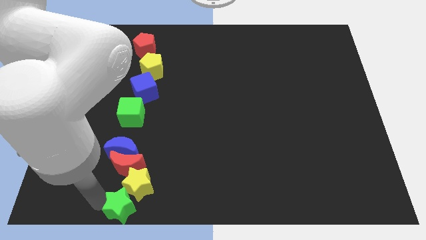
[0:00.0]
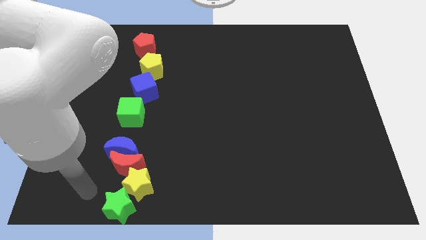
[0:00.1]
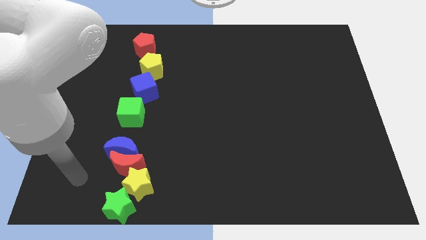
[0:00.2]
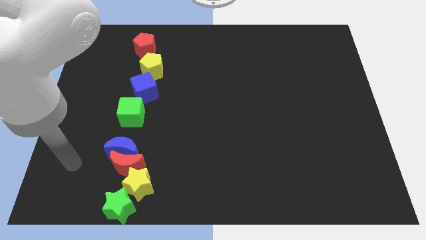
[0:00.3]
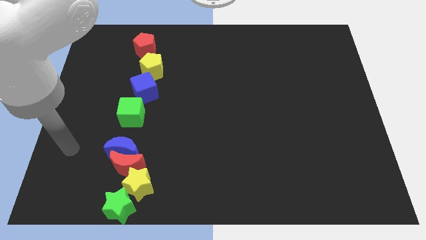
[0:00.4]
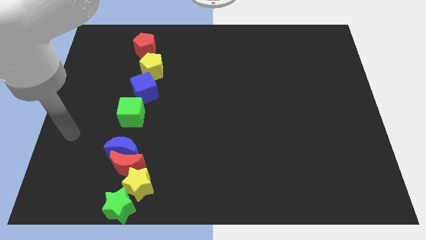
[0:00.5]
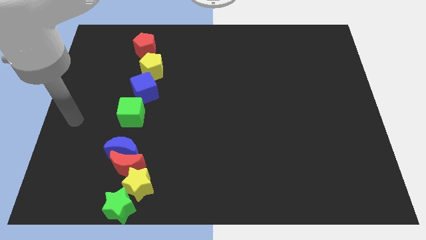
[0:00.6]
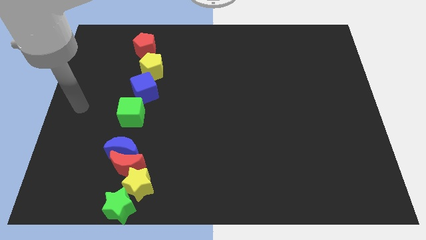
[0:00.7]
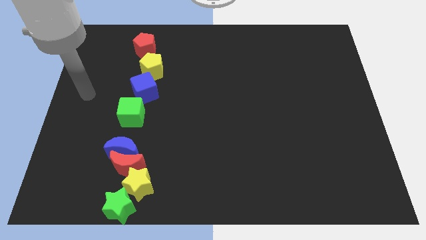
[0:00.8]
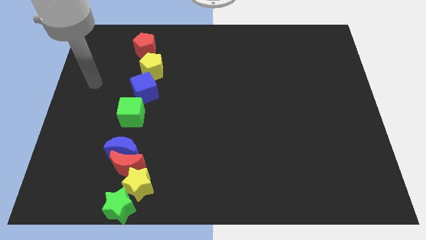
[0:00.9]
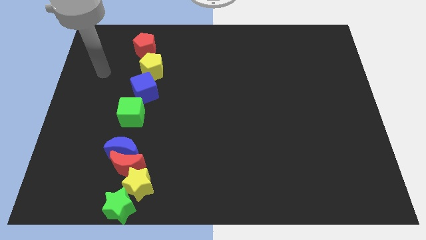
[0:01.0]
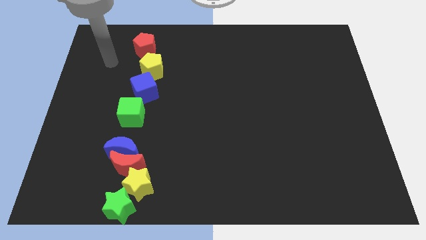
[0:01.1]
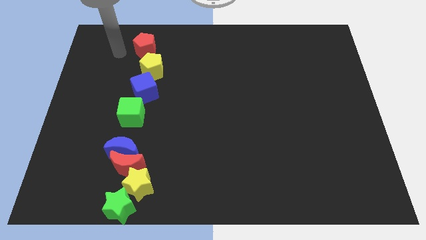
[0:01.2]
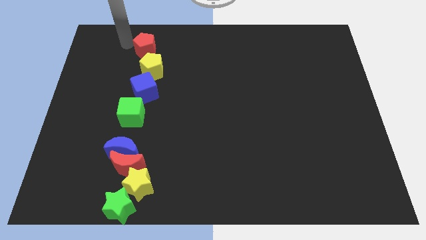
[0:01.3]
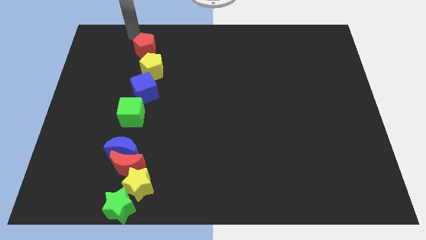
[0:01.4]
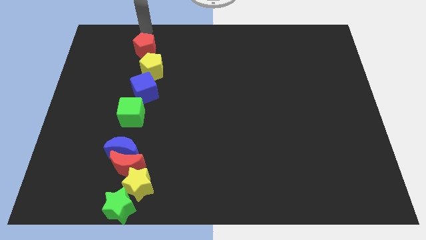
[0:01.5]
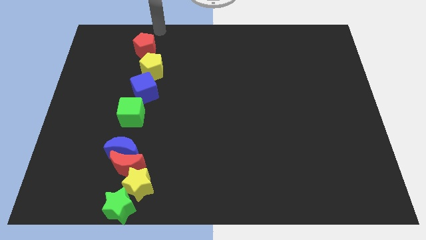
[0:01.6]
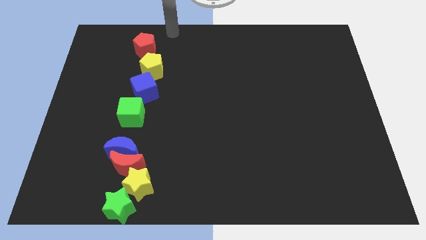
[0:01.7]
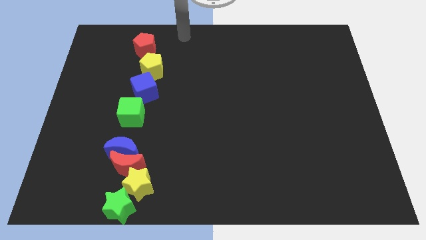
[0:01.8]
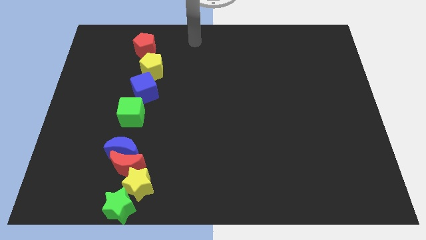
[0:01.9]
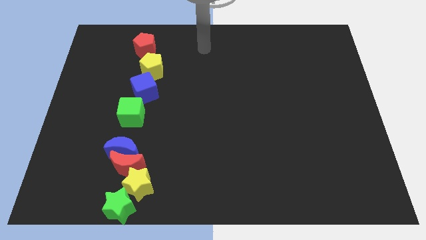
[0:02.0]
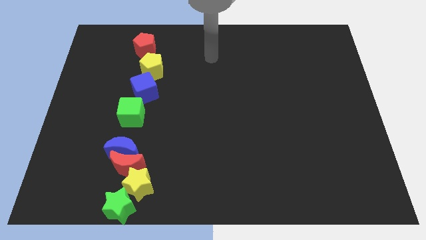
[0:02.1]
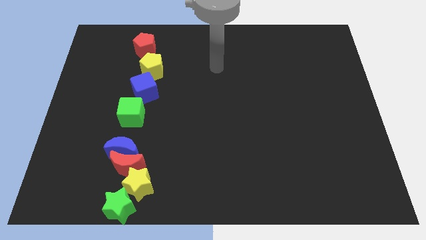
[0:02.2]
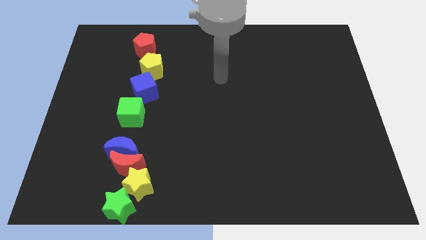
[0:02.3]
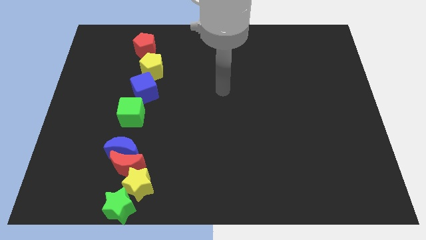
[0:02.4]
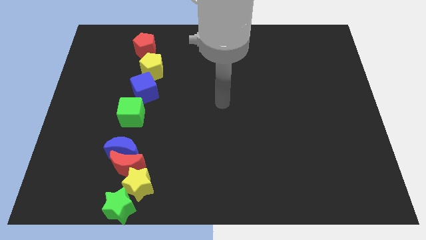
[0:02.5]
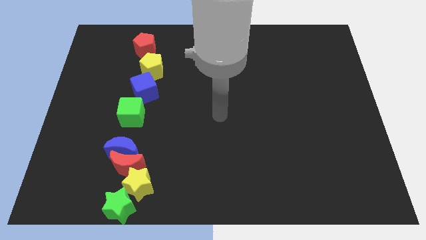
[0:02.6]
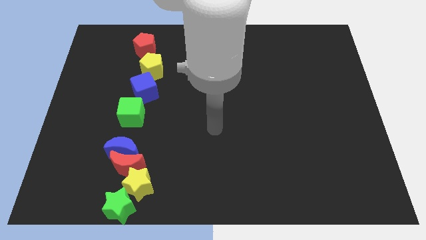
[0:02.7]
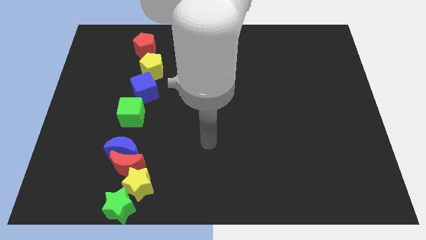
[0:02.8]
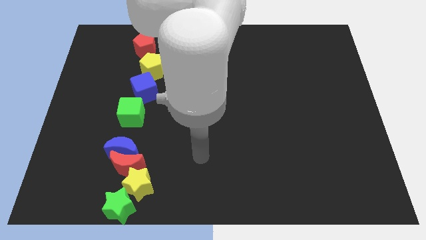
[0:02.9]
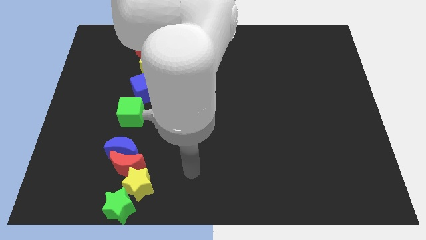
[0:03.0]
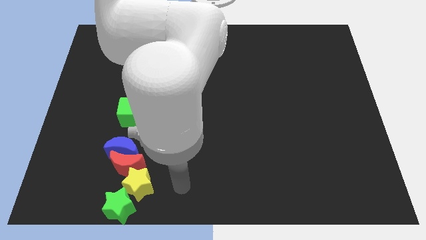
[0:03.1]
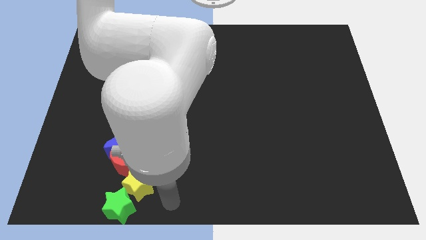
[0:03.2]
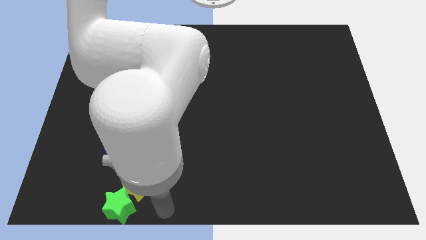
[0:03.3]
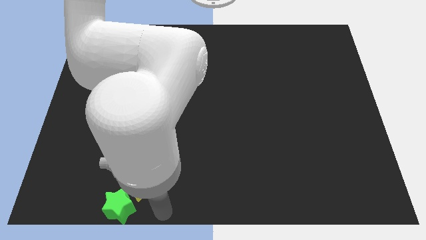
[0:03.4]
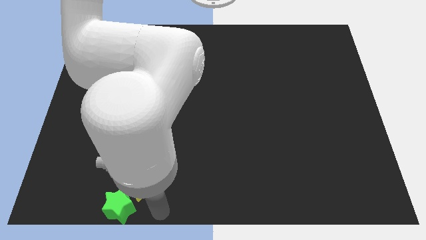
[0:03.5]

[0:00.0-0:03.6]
point the arm to the right of the green star

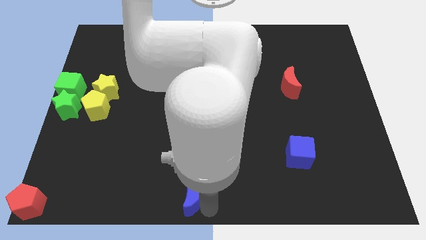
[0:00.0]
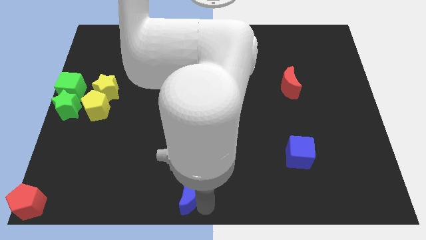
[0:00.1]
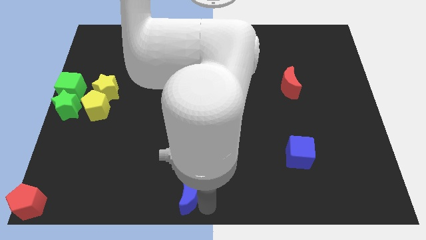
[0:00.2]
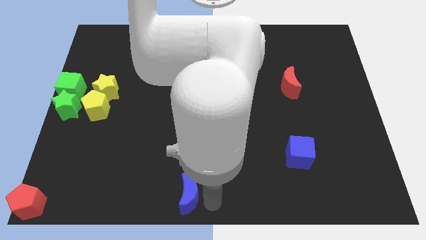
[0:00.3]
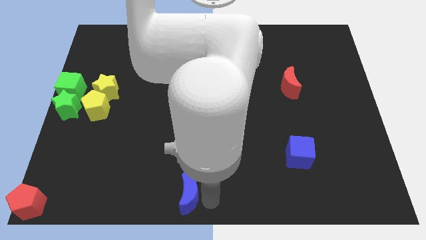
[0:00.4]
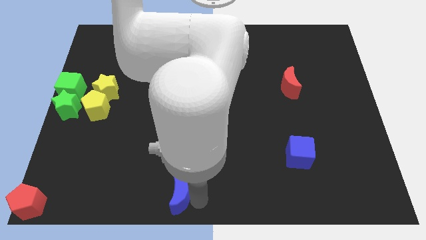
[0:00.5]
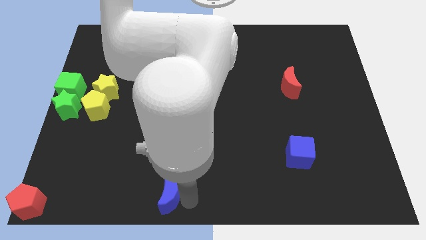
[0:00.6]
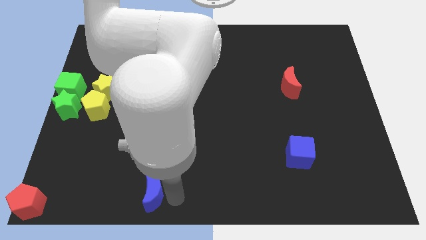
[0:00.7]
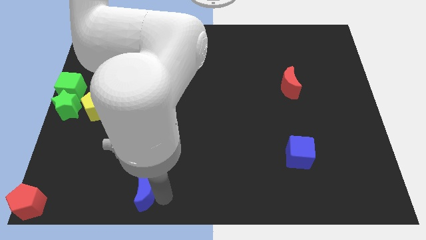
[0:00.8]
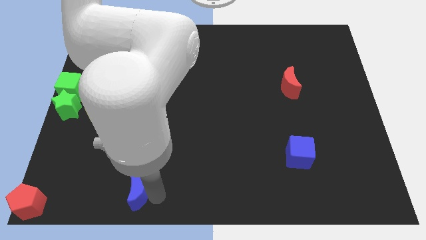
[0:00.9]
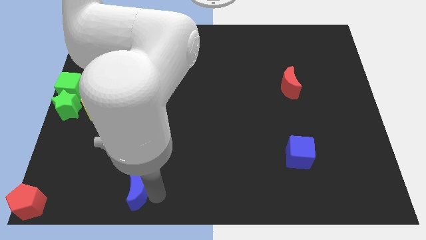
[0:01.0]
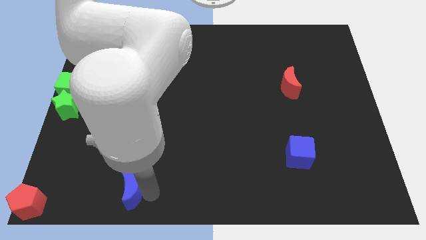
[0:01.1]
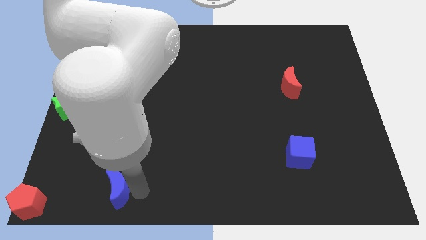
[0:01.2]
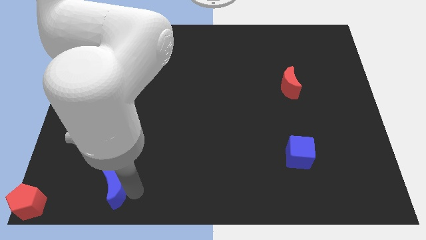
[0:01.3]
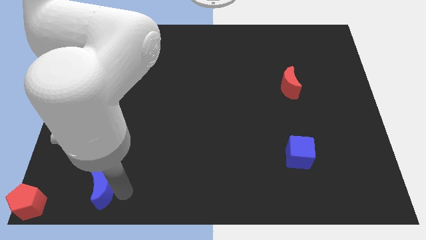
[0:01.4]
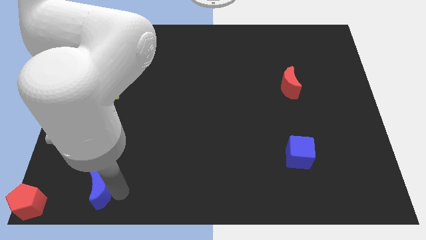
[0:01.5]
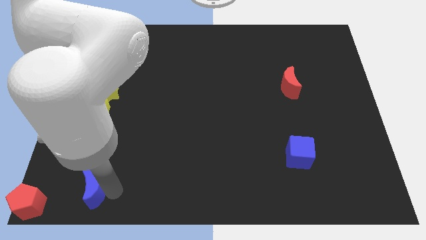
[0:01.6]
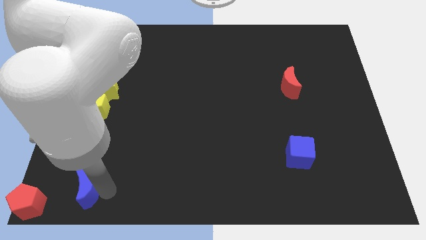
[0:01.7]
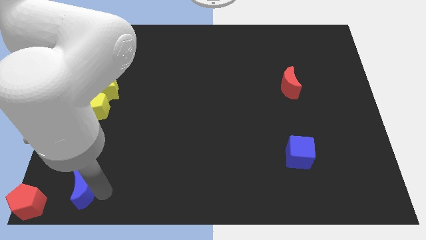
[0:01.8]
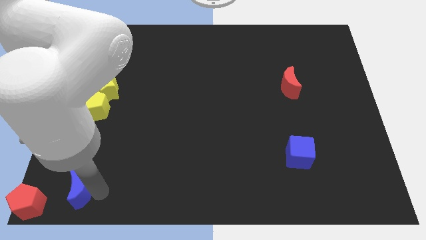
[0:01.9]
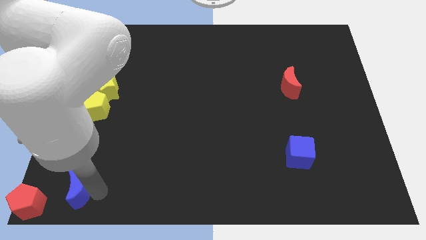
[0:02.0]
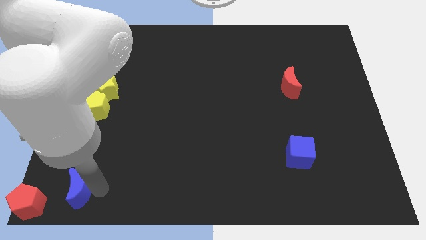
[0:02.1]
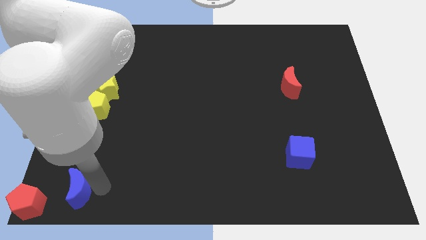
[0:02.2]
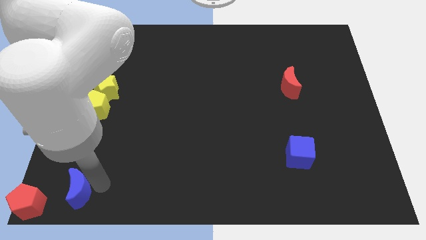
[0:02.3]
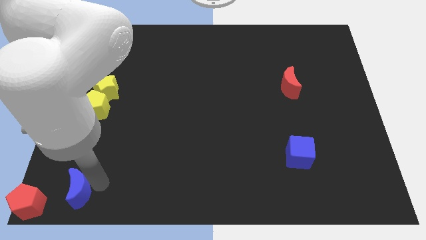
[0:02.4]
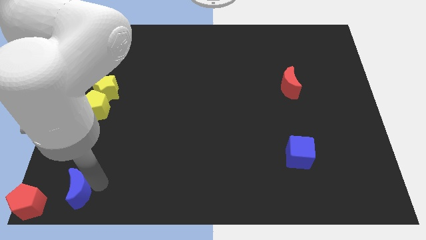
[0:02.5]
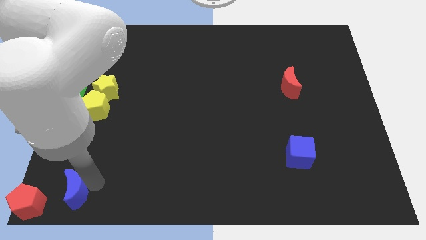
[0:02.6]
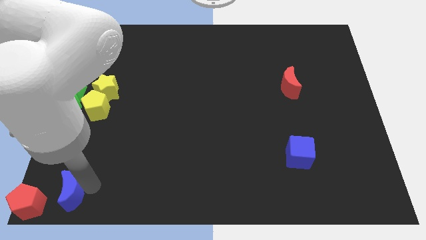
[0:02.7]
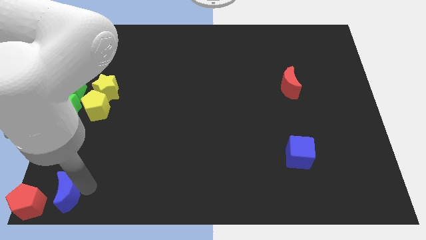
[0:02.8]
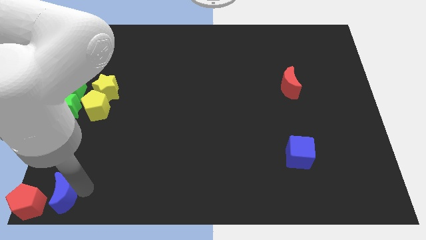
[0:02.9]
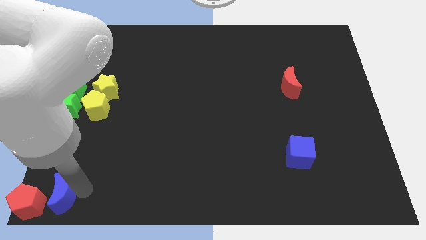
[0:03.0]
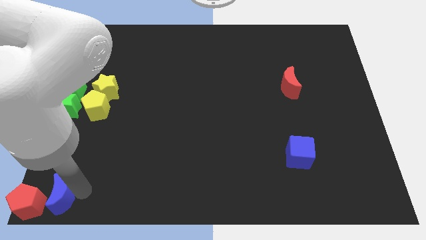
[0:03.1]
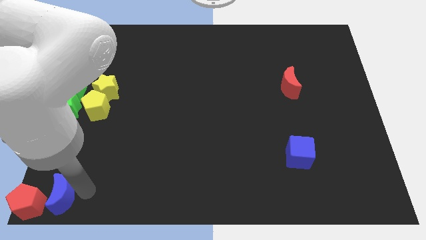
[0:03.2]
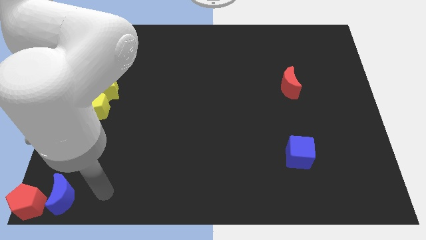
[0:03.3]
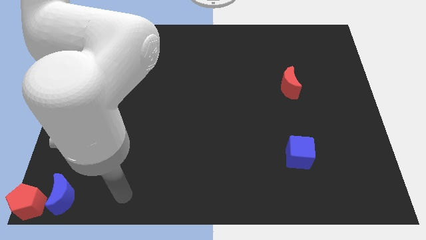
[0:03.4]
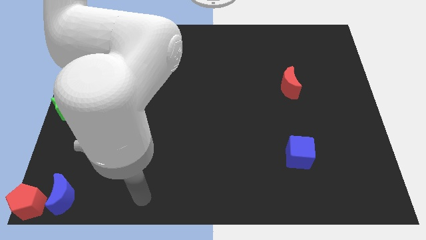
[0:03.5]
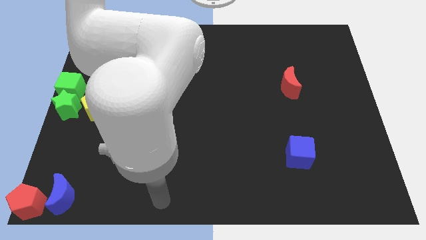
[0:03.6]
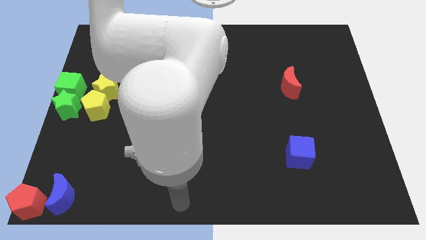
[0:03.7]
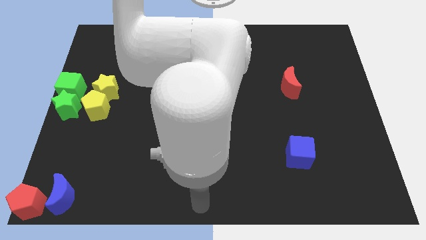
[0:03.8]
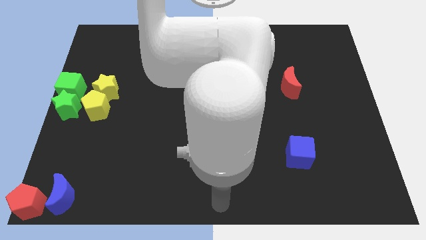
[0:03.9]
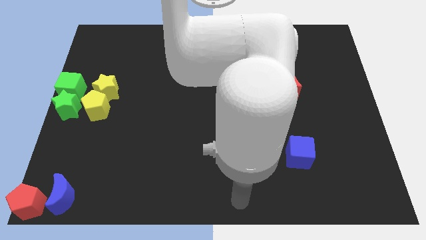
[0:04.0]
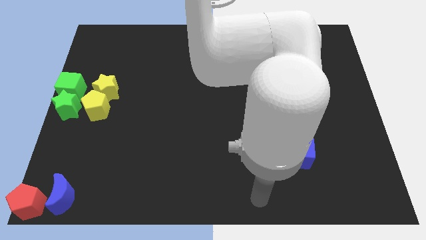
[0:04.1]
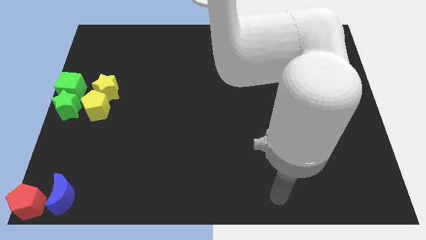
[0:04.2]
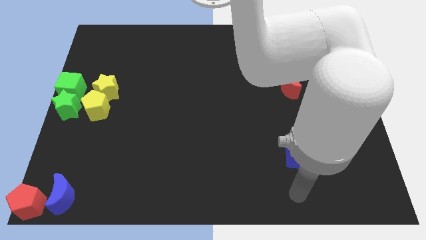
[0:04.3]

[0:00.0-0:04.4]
push the blue moon to the right side of the red pentagon

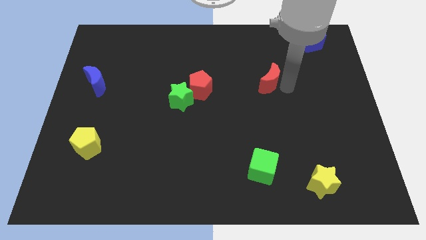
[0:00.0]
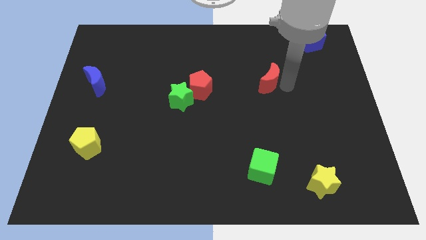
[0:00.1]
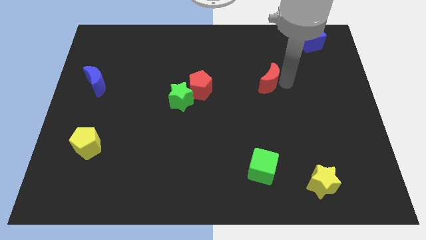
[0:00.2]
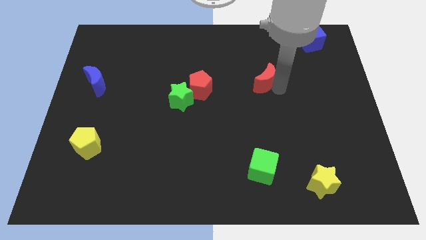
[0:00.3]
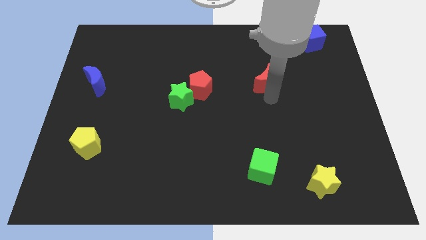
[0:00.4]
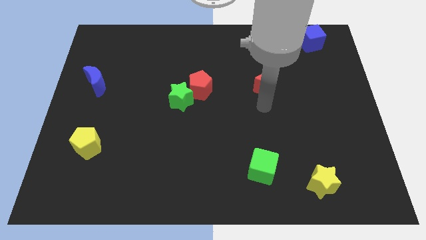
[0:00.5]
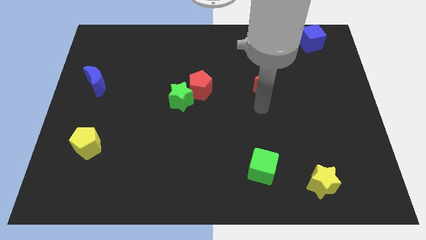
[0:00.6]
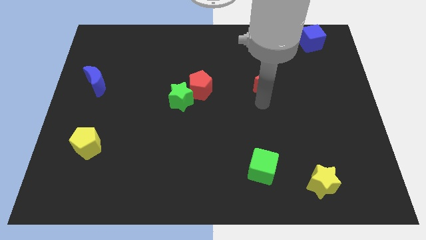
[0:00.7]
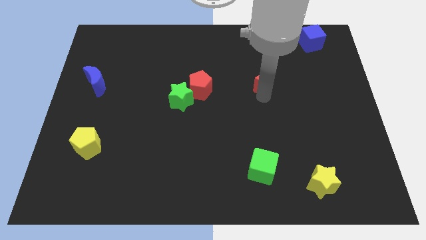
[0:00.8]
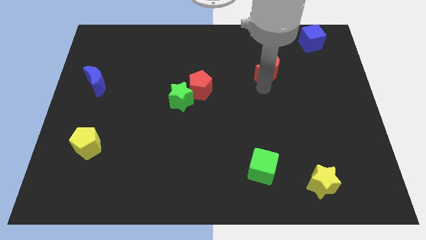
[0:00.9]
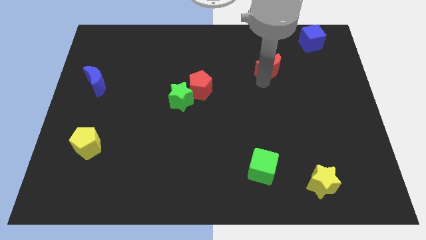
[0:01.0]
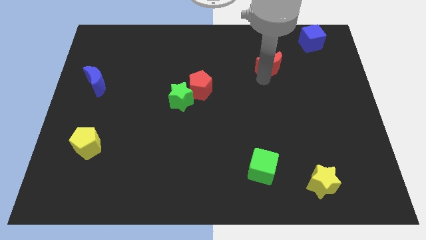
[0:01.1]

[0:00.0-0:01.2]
place the red moon diagonally between the blue cube and red pentagon
